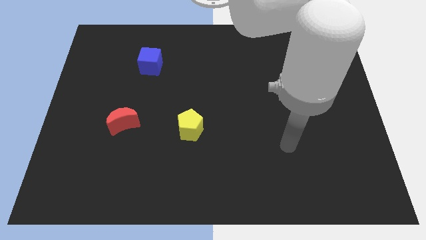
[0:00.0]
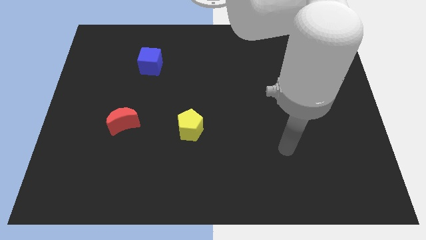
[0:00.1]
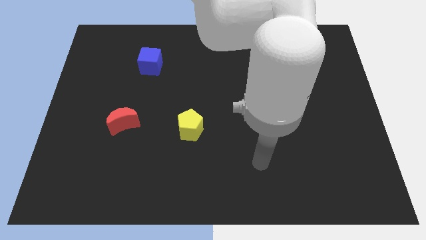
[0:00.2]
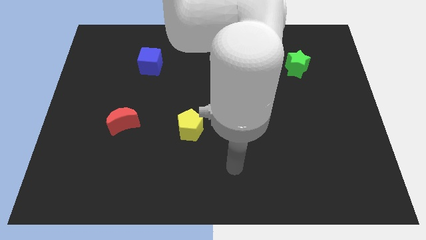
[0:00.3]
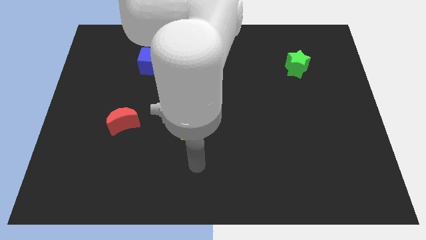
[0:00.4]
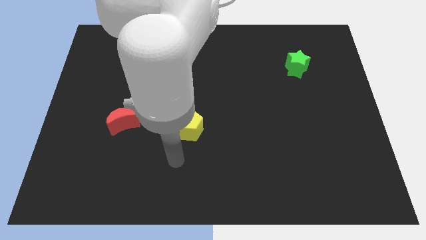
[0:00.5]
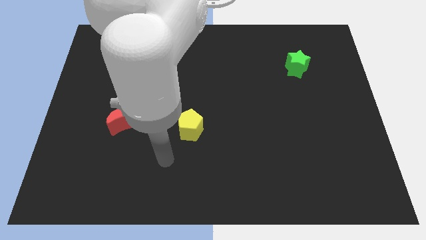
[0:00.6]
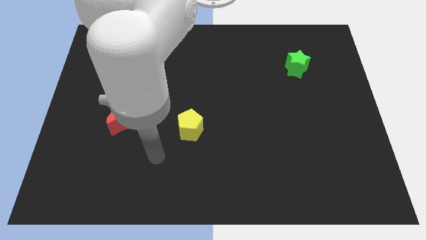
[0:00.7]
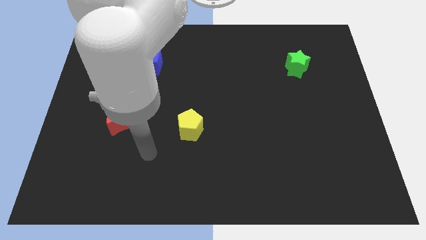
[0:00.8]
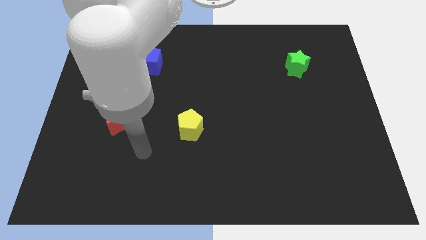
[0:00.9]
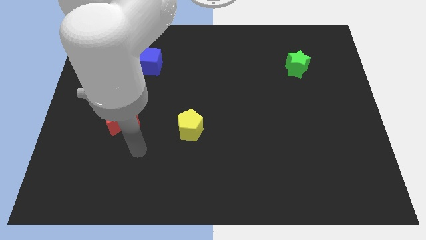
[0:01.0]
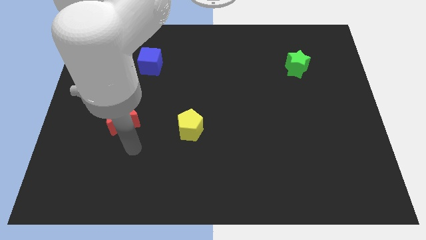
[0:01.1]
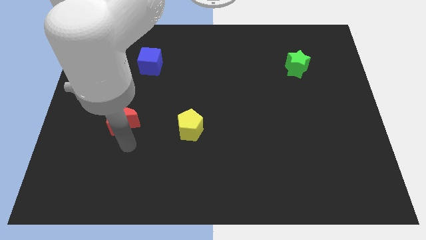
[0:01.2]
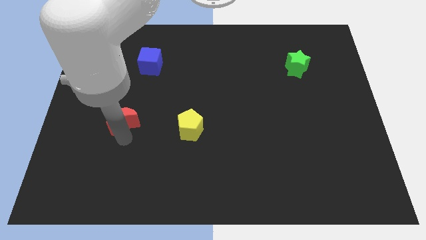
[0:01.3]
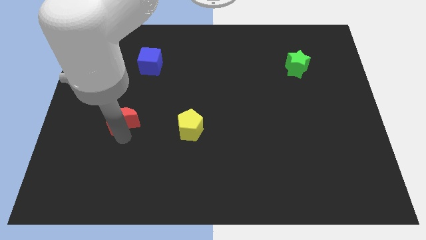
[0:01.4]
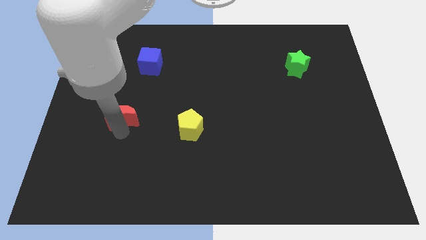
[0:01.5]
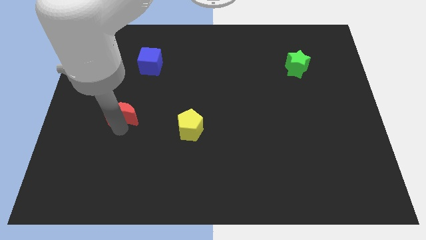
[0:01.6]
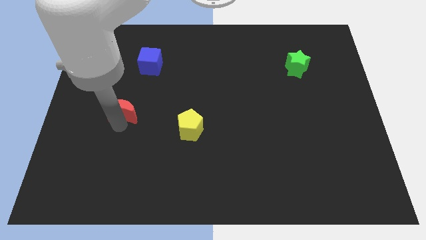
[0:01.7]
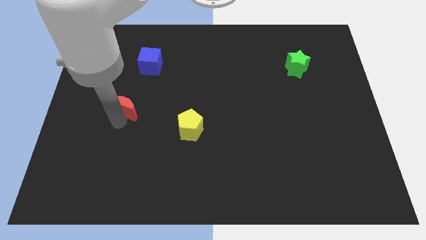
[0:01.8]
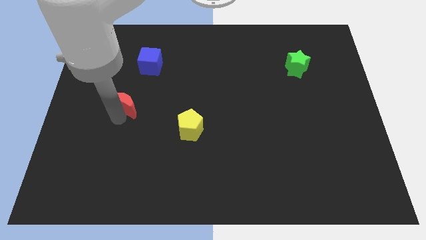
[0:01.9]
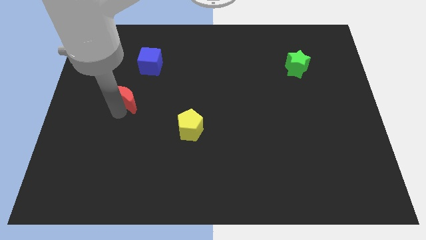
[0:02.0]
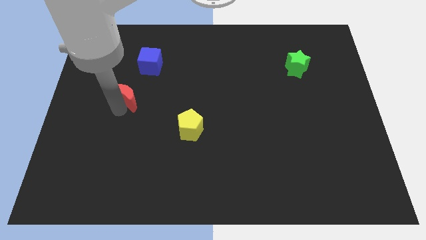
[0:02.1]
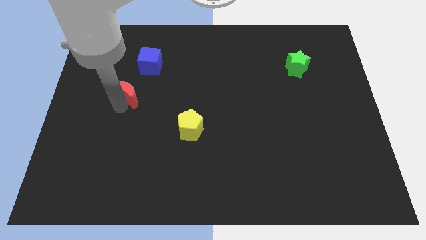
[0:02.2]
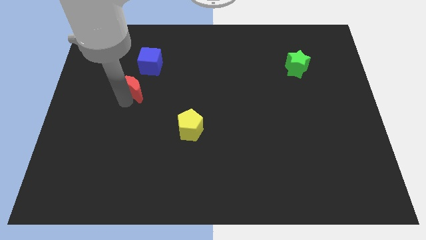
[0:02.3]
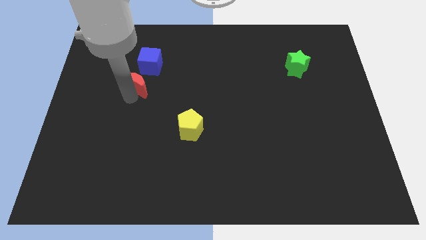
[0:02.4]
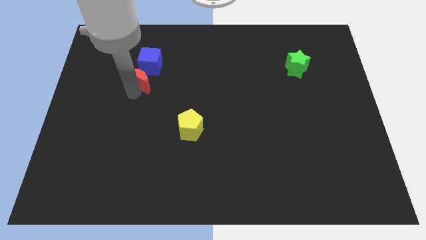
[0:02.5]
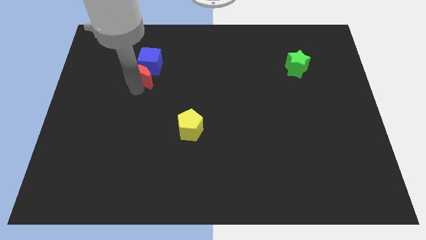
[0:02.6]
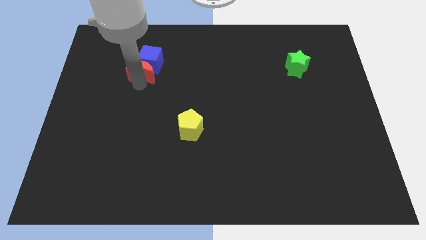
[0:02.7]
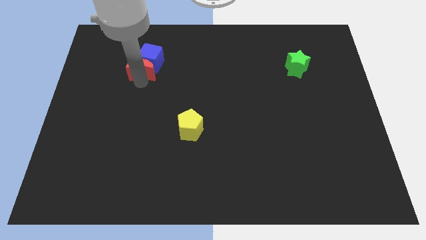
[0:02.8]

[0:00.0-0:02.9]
put the moon next to the blue cube

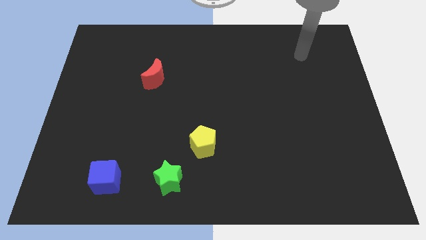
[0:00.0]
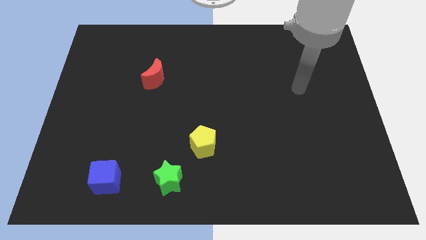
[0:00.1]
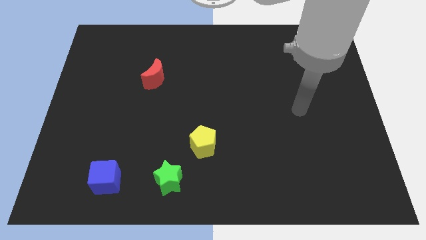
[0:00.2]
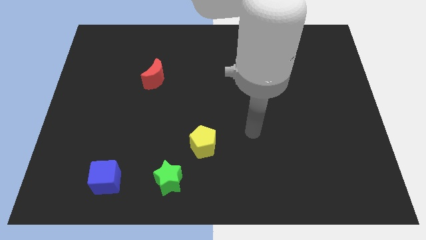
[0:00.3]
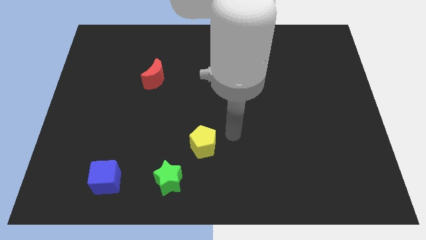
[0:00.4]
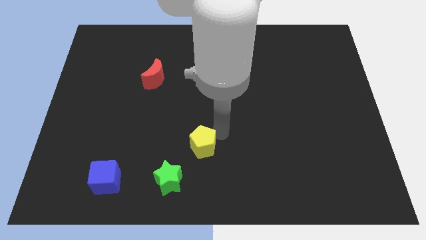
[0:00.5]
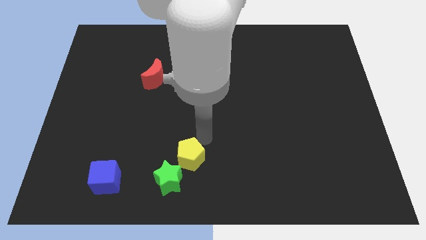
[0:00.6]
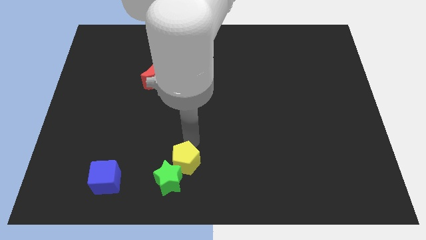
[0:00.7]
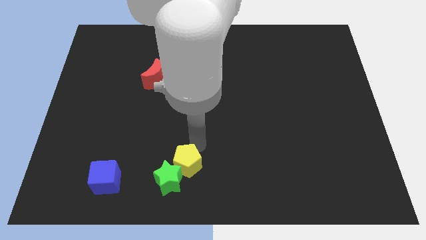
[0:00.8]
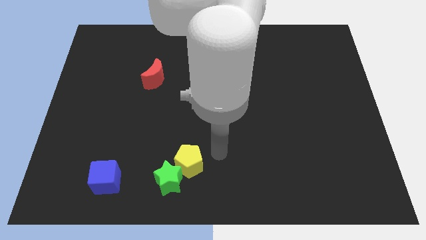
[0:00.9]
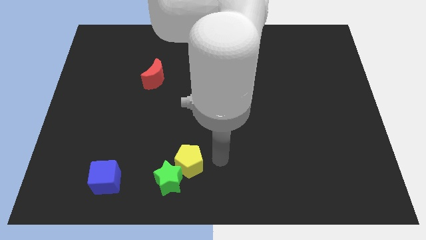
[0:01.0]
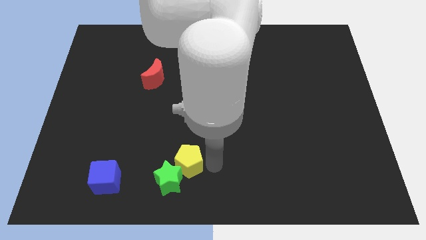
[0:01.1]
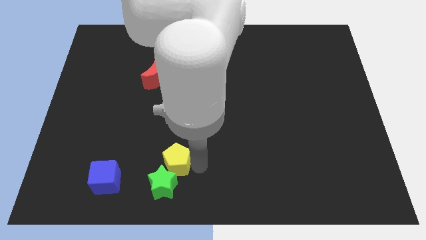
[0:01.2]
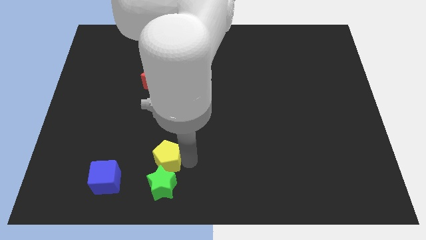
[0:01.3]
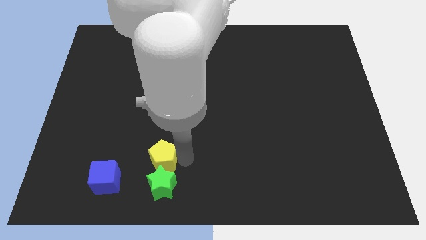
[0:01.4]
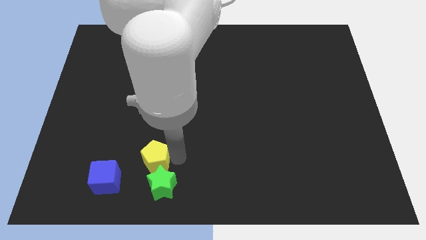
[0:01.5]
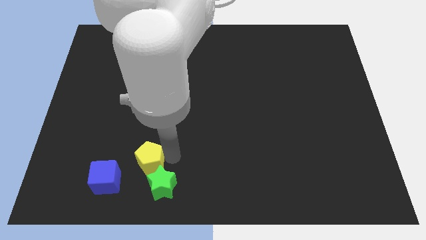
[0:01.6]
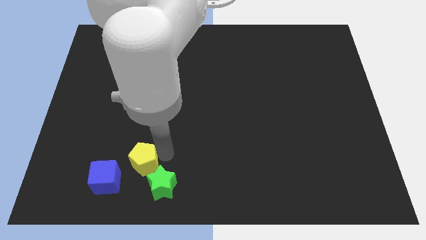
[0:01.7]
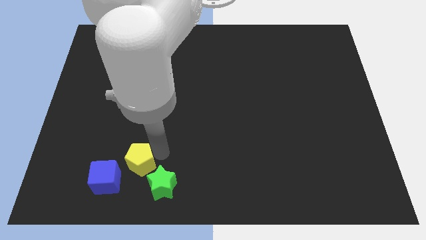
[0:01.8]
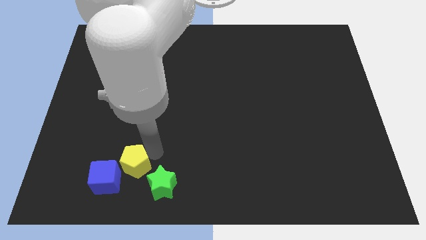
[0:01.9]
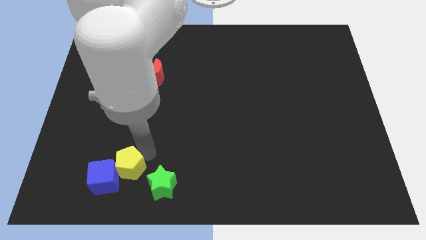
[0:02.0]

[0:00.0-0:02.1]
put the yellow block towards the blue cube

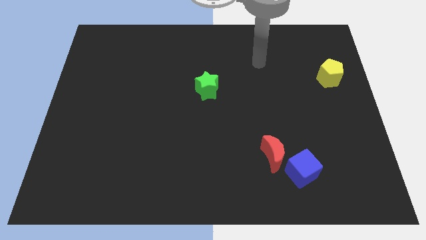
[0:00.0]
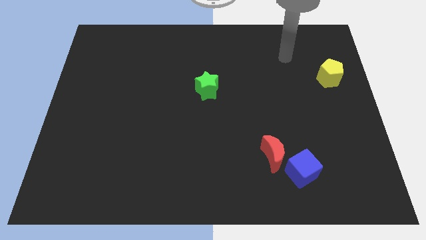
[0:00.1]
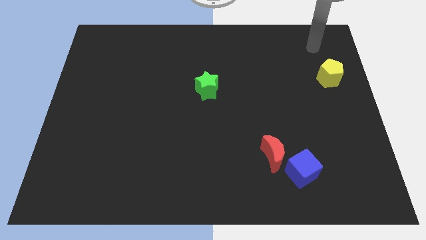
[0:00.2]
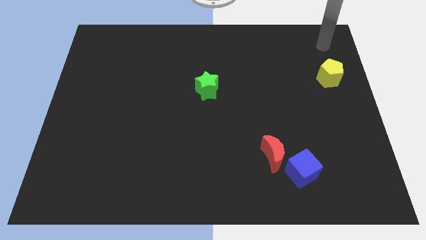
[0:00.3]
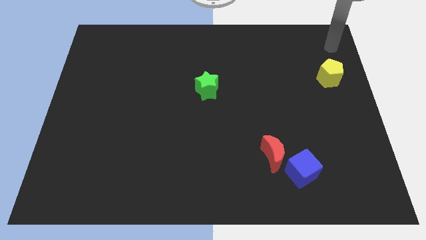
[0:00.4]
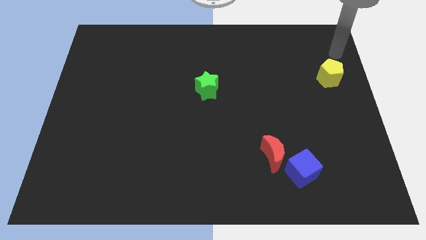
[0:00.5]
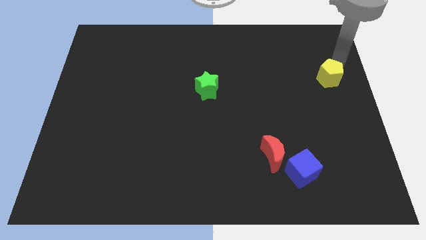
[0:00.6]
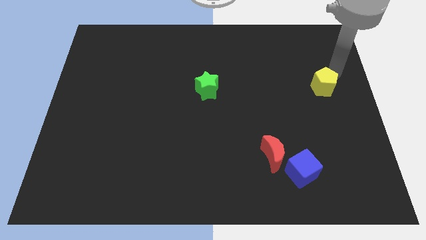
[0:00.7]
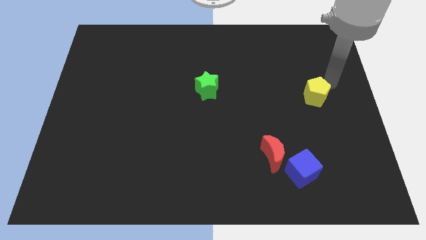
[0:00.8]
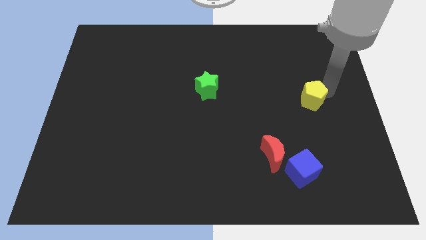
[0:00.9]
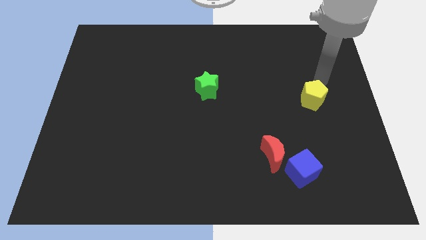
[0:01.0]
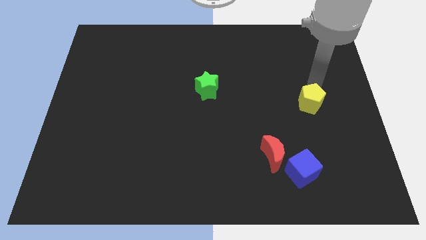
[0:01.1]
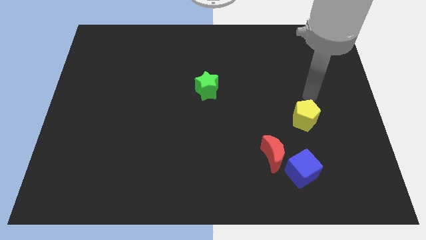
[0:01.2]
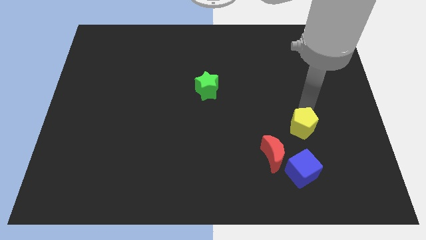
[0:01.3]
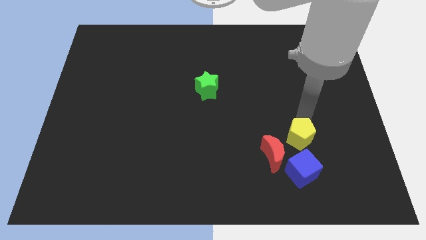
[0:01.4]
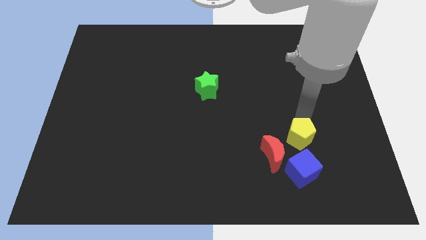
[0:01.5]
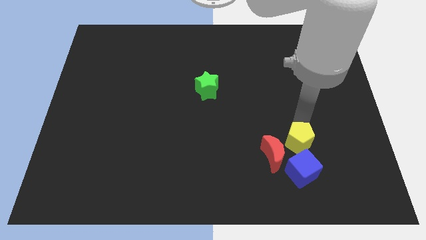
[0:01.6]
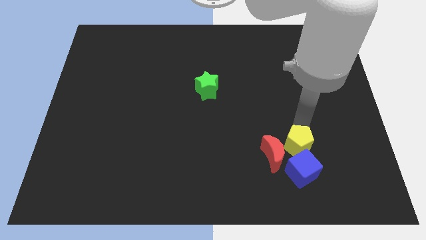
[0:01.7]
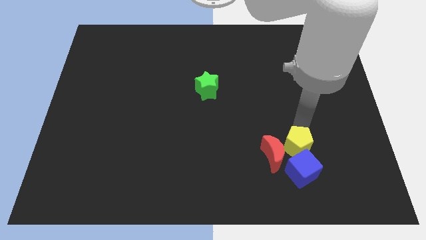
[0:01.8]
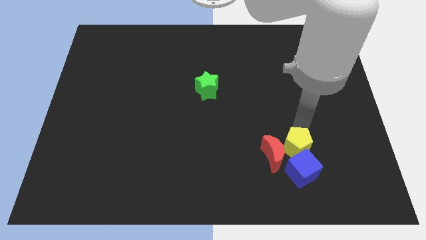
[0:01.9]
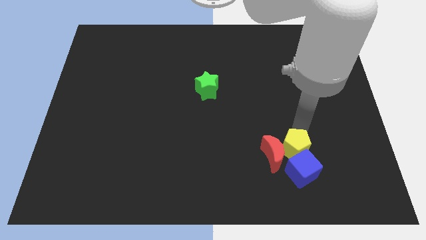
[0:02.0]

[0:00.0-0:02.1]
put the yellow pentagon to the blue cube

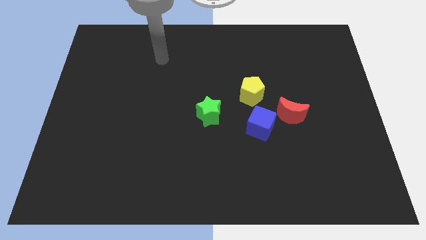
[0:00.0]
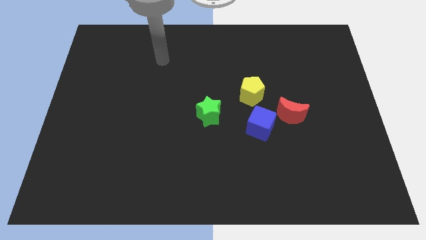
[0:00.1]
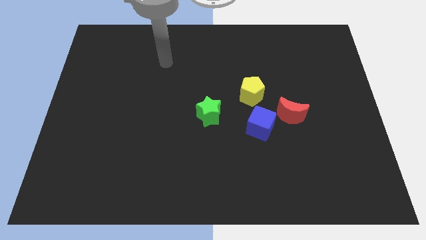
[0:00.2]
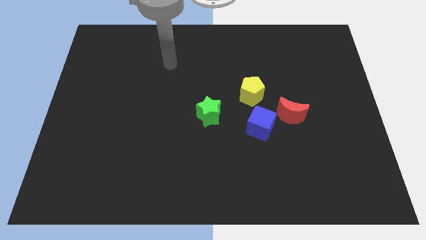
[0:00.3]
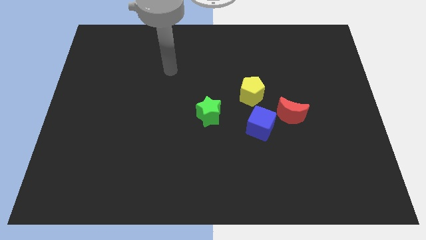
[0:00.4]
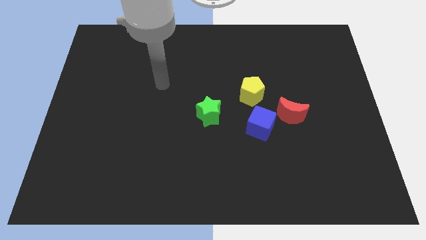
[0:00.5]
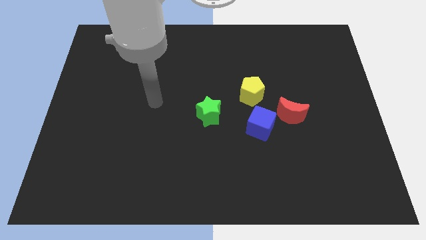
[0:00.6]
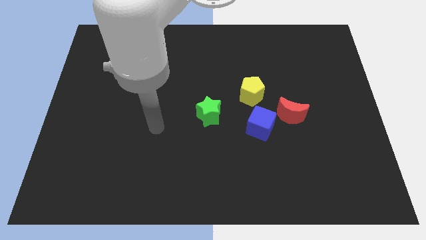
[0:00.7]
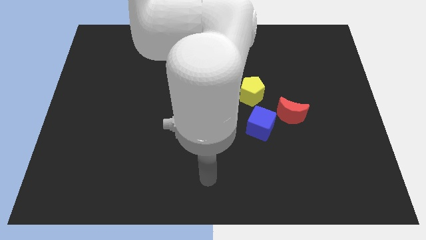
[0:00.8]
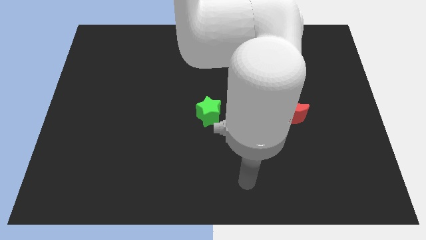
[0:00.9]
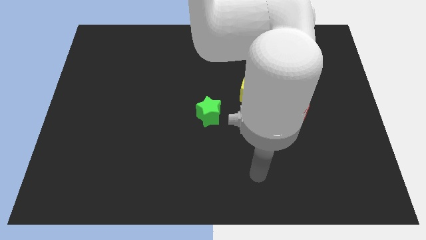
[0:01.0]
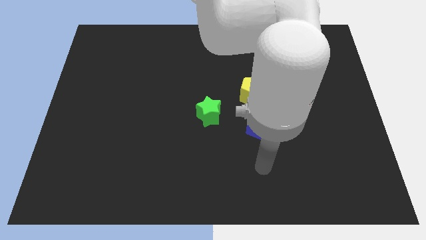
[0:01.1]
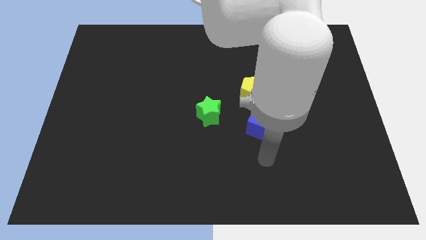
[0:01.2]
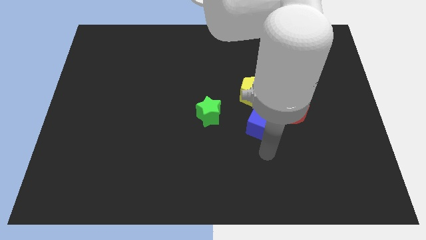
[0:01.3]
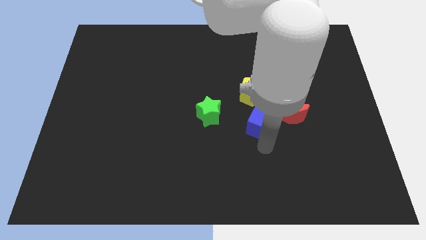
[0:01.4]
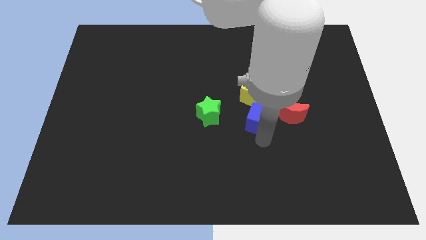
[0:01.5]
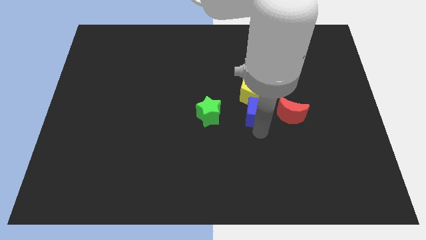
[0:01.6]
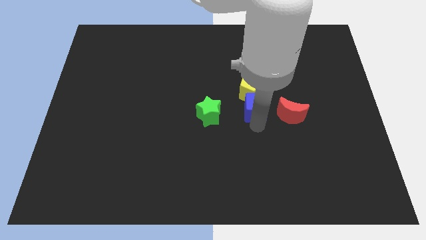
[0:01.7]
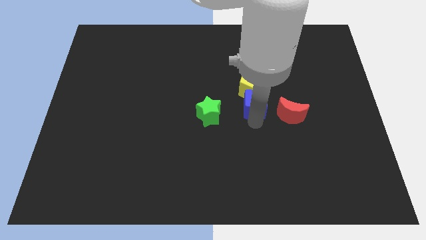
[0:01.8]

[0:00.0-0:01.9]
put the cube towards the yellow block
